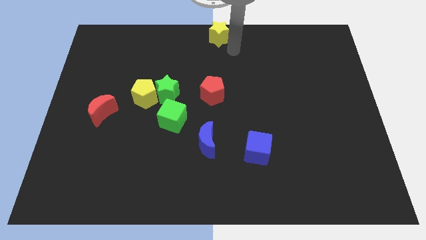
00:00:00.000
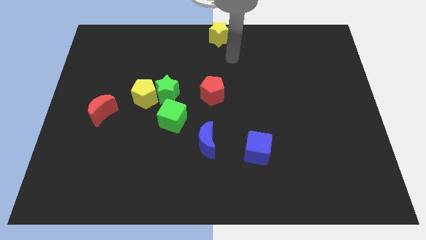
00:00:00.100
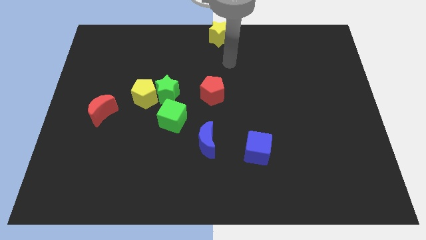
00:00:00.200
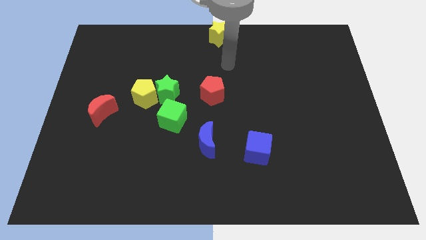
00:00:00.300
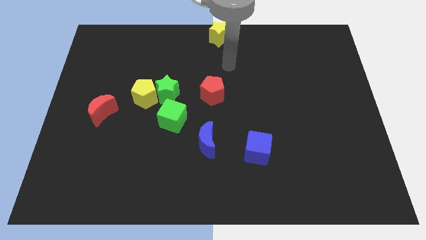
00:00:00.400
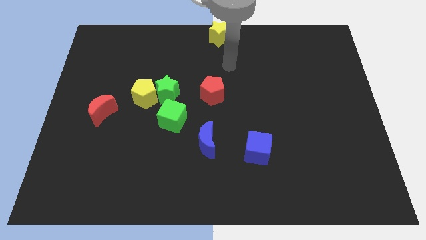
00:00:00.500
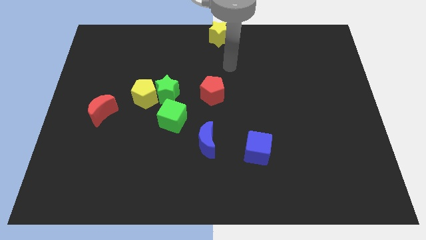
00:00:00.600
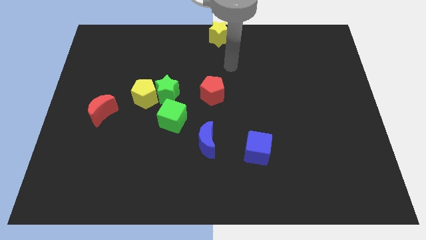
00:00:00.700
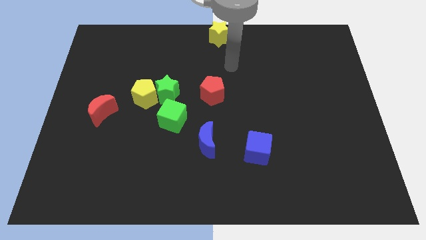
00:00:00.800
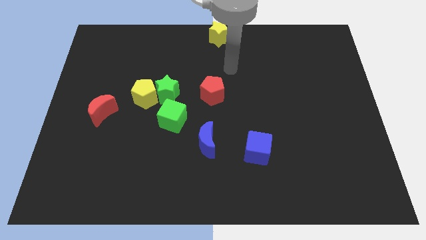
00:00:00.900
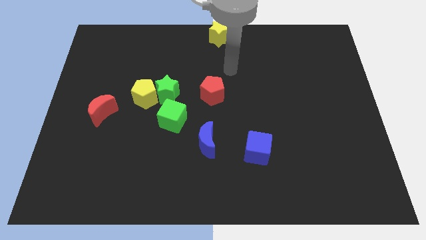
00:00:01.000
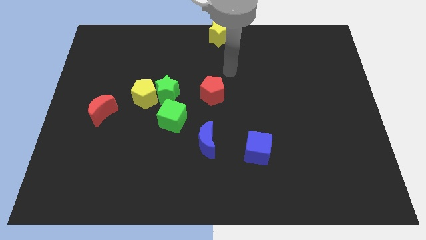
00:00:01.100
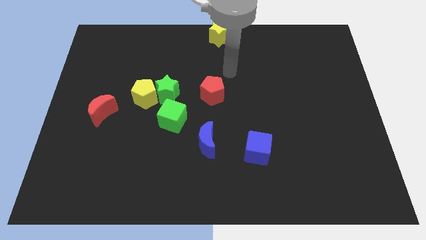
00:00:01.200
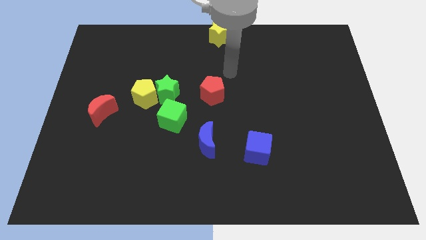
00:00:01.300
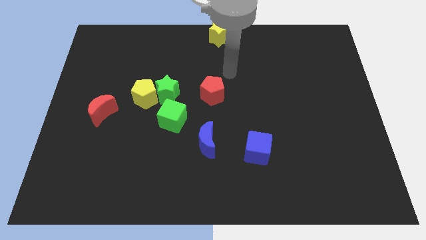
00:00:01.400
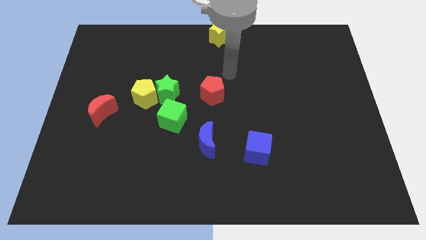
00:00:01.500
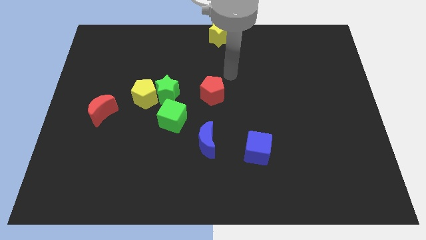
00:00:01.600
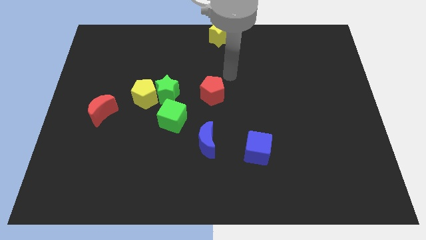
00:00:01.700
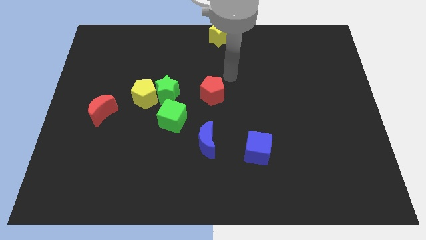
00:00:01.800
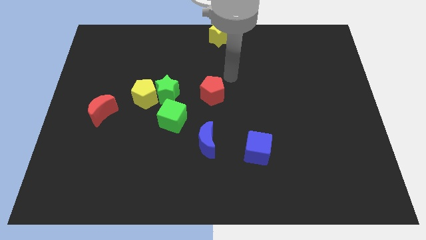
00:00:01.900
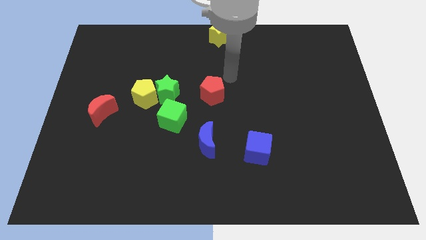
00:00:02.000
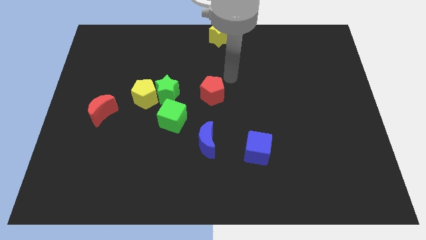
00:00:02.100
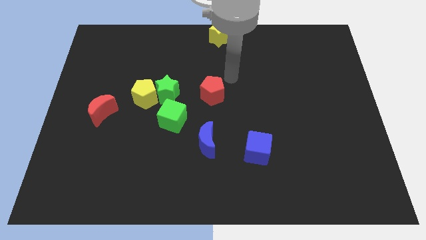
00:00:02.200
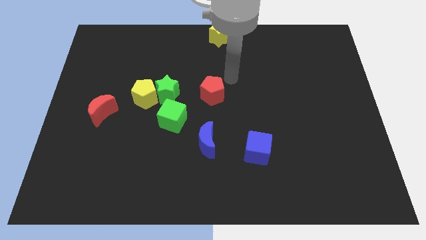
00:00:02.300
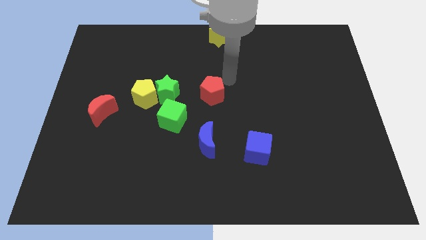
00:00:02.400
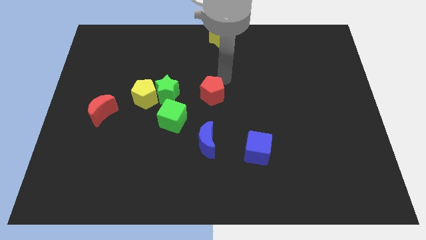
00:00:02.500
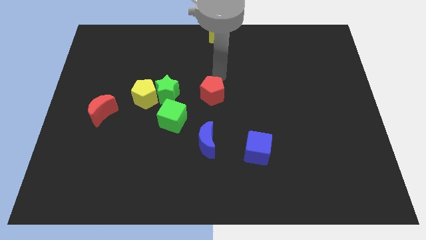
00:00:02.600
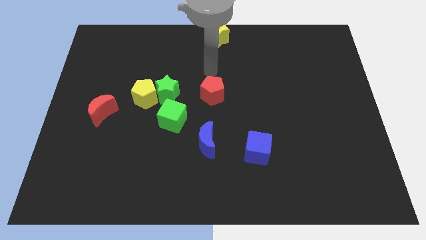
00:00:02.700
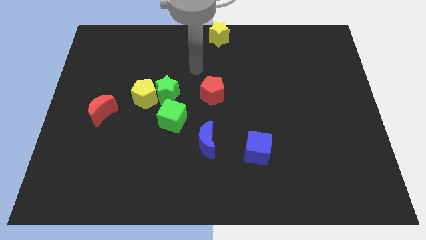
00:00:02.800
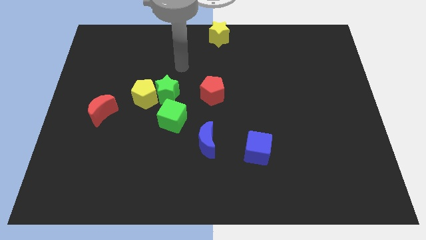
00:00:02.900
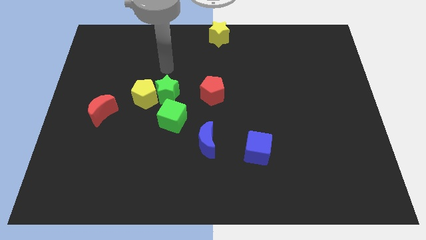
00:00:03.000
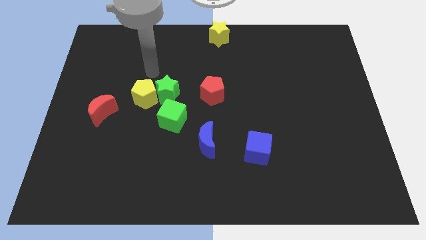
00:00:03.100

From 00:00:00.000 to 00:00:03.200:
move your arm to the top of yellow pentagon

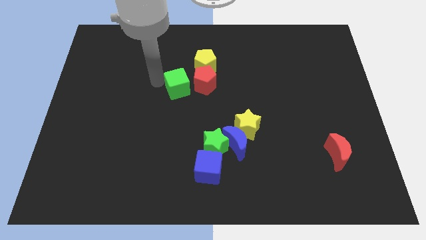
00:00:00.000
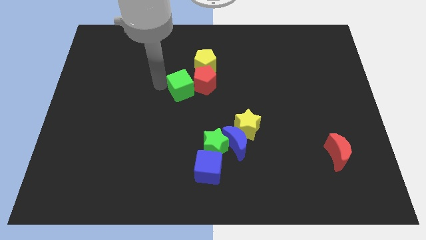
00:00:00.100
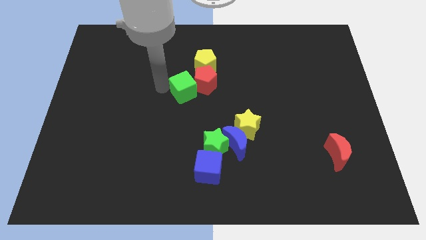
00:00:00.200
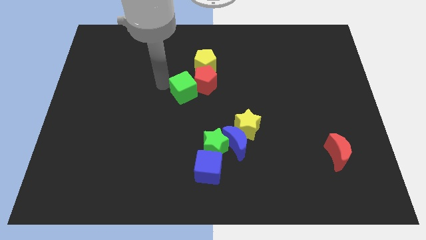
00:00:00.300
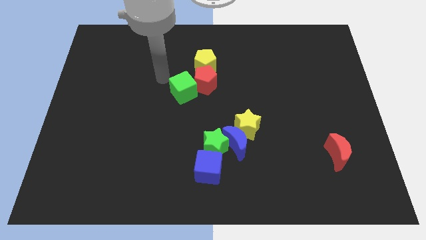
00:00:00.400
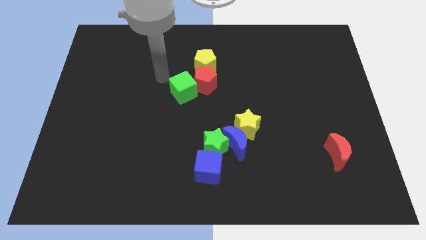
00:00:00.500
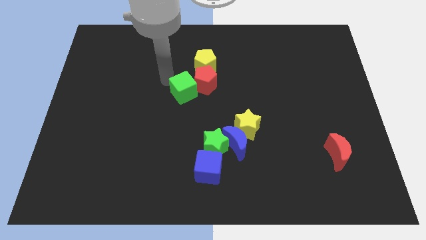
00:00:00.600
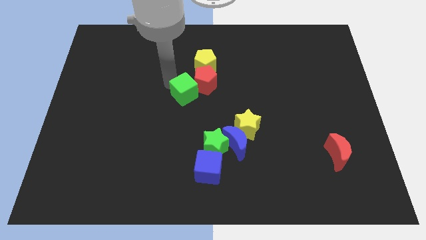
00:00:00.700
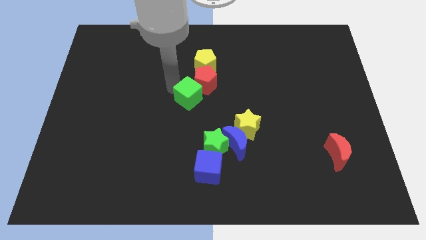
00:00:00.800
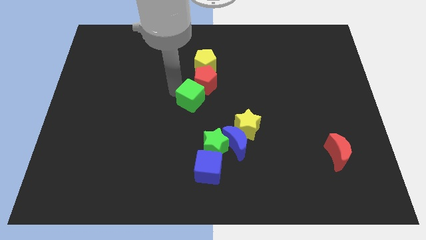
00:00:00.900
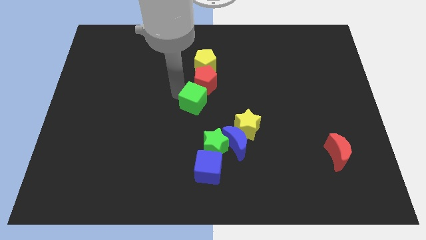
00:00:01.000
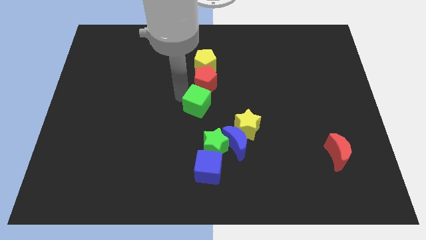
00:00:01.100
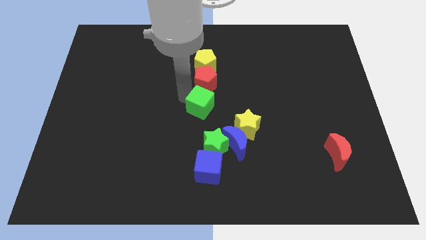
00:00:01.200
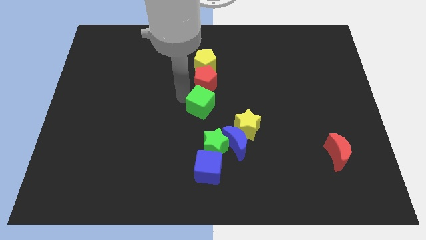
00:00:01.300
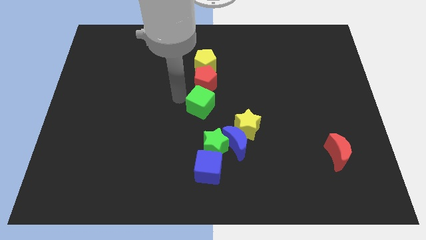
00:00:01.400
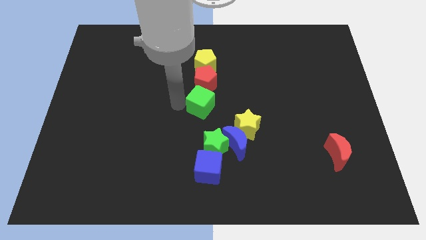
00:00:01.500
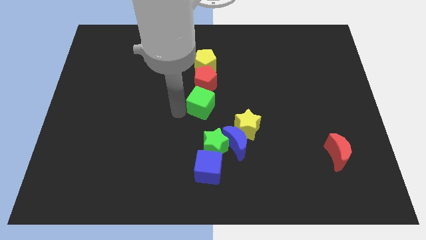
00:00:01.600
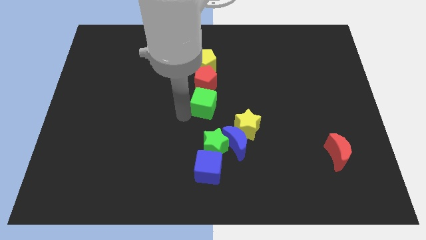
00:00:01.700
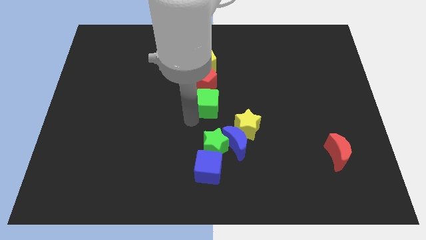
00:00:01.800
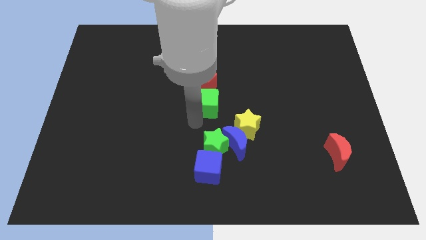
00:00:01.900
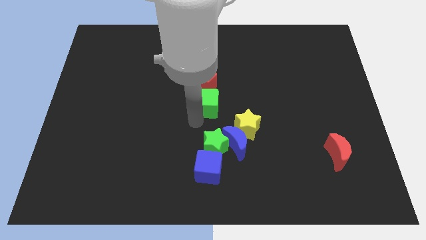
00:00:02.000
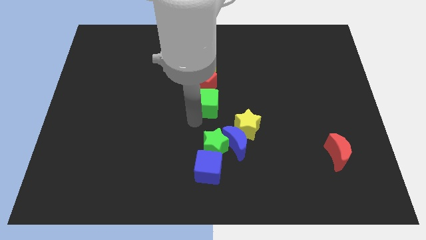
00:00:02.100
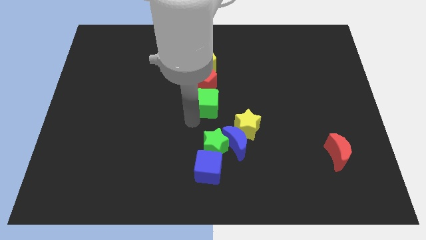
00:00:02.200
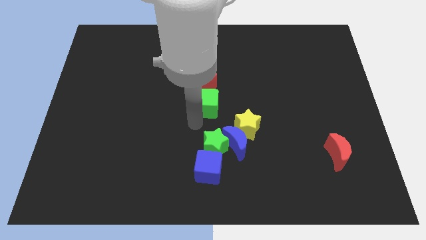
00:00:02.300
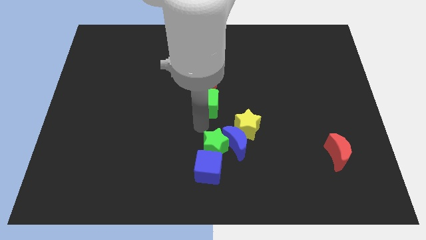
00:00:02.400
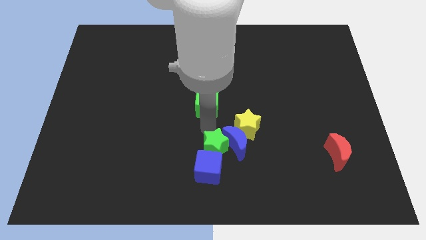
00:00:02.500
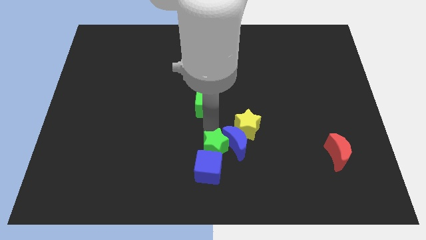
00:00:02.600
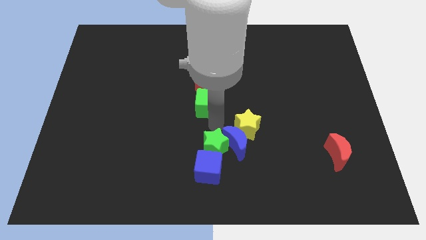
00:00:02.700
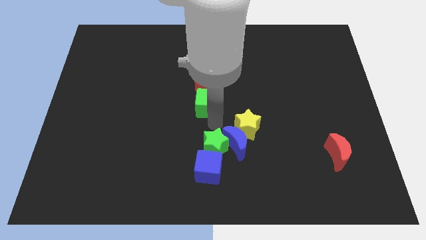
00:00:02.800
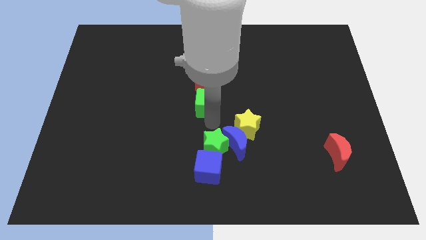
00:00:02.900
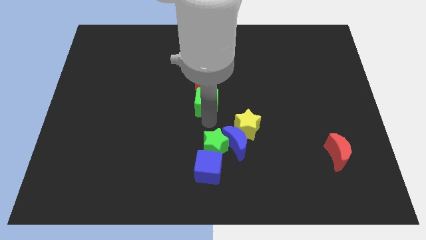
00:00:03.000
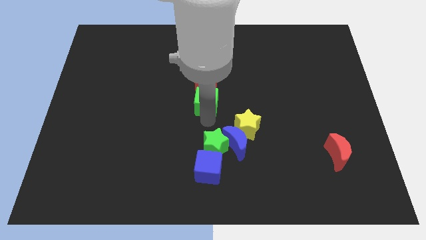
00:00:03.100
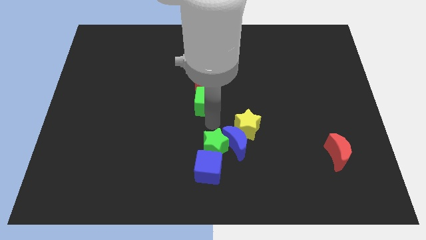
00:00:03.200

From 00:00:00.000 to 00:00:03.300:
put the green cube vertically below the red pentagon

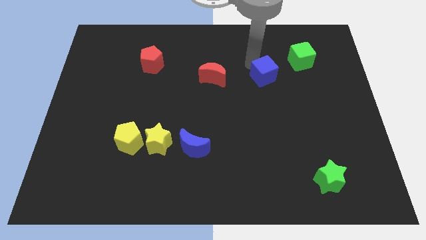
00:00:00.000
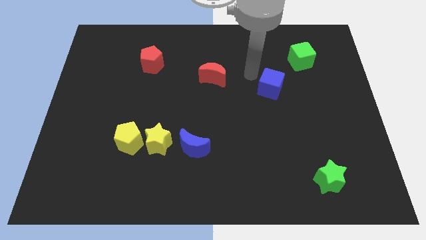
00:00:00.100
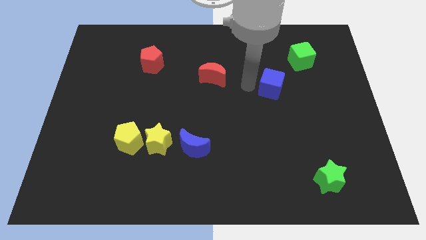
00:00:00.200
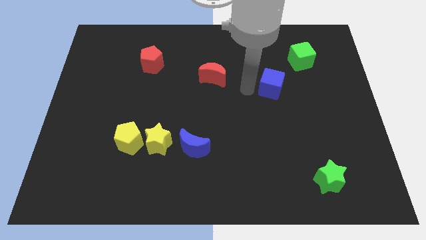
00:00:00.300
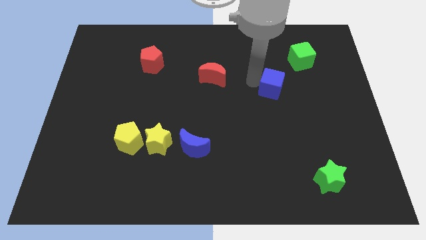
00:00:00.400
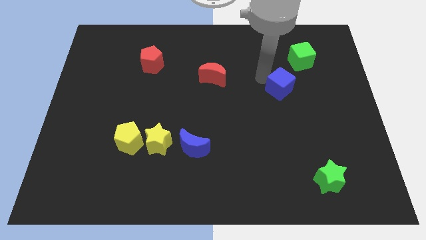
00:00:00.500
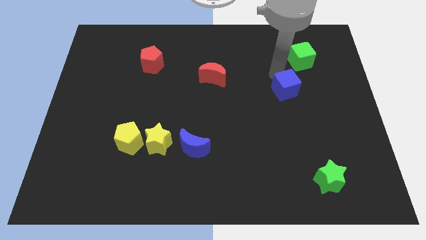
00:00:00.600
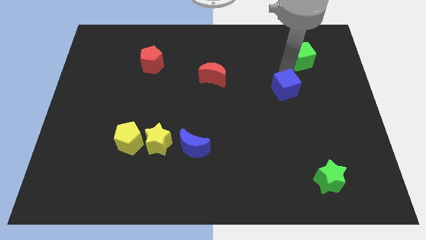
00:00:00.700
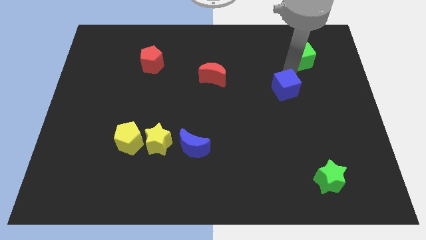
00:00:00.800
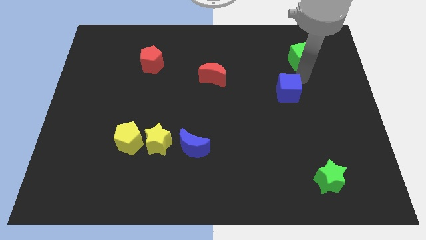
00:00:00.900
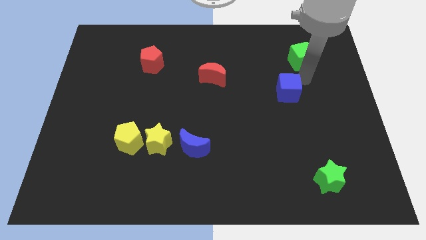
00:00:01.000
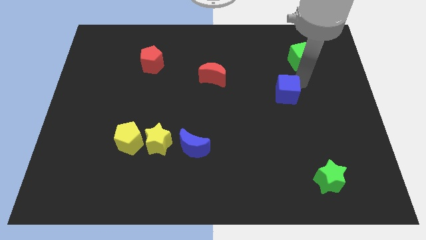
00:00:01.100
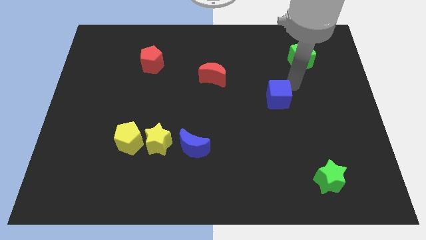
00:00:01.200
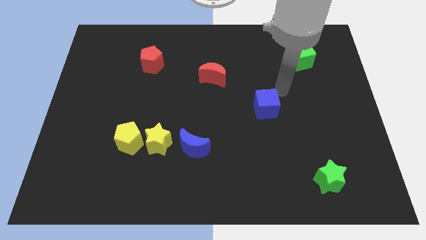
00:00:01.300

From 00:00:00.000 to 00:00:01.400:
push the blue cube to the bottom right of the red crescent

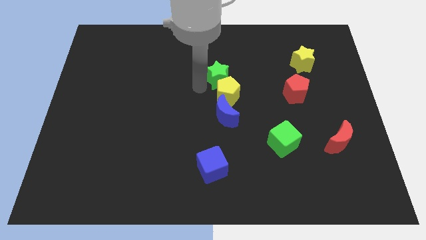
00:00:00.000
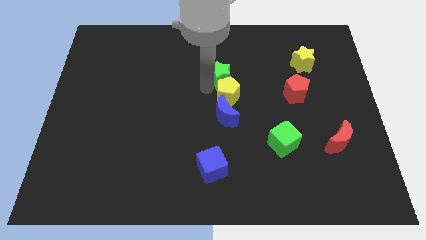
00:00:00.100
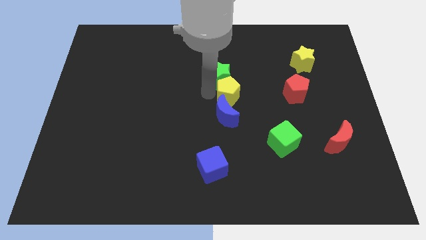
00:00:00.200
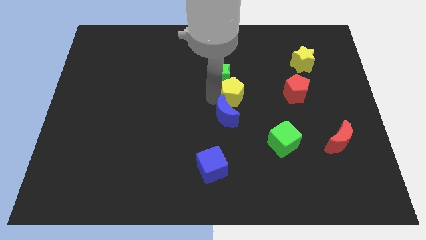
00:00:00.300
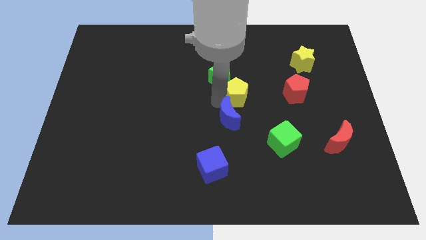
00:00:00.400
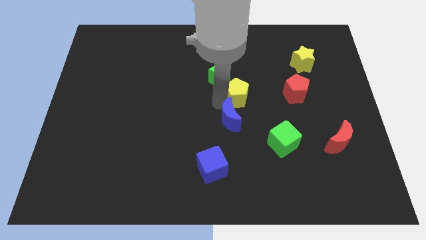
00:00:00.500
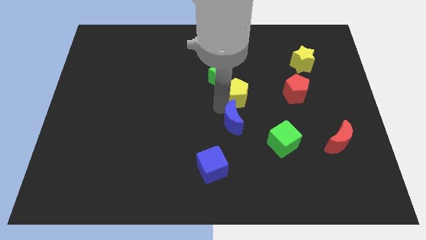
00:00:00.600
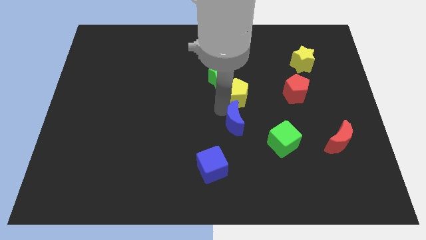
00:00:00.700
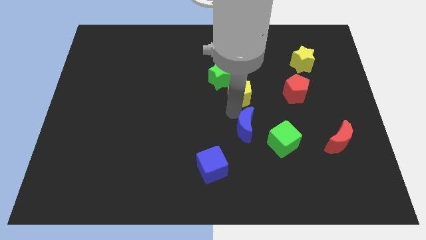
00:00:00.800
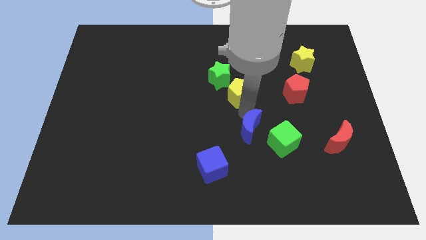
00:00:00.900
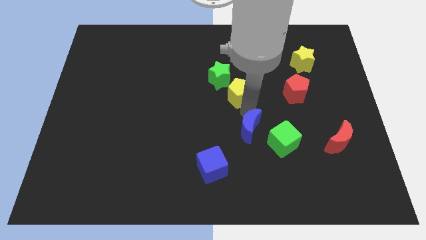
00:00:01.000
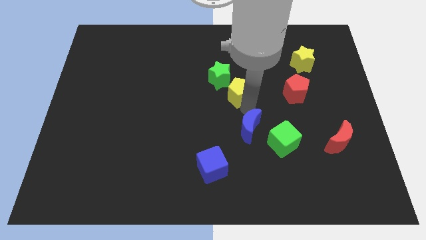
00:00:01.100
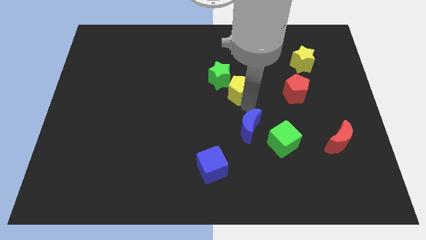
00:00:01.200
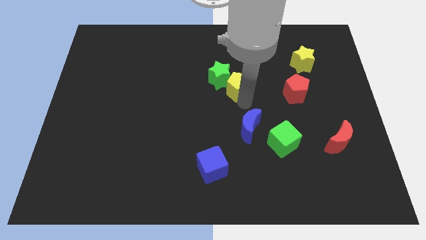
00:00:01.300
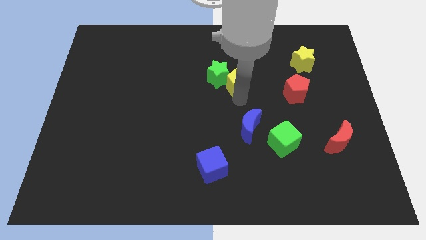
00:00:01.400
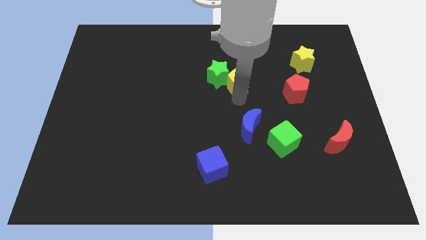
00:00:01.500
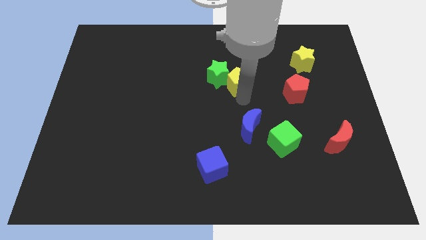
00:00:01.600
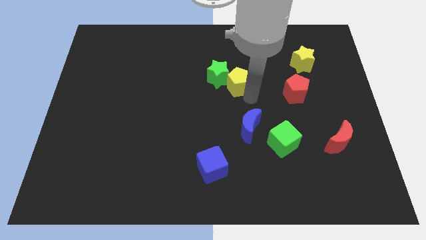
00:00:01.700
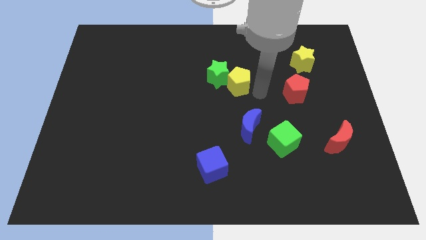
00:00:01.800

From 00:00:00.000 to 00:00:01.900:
move yellow pentagon right to green star
